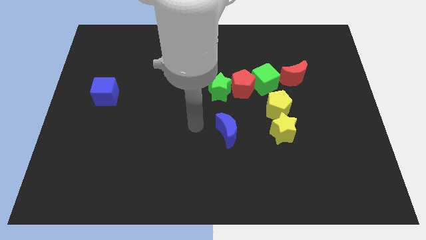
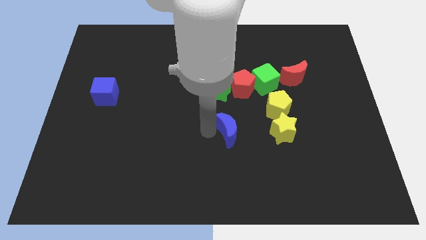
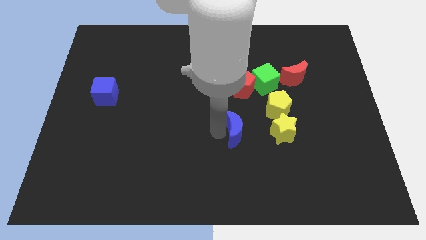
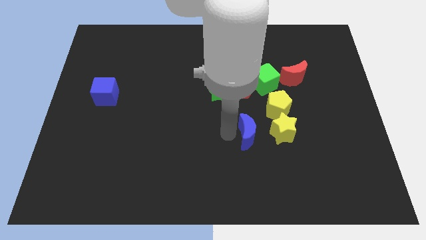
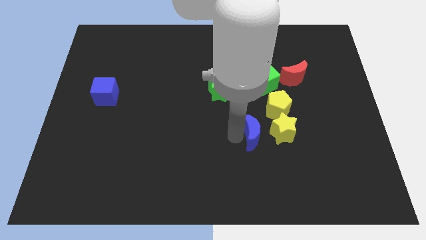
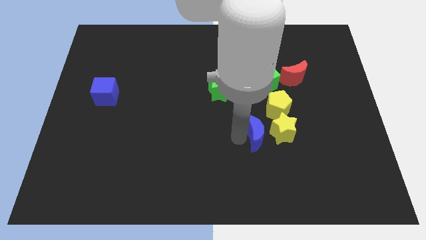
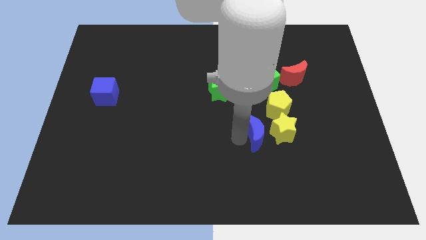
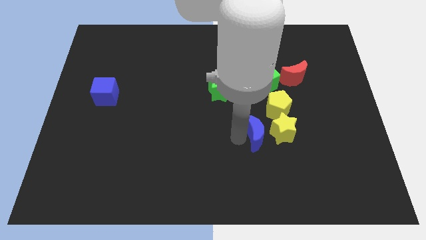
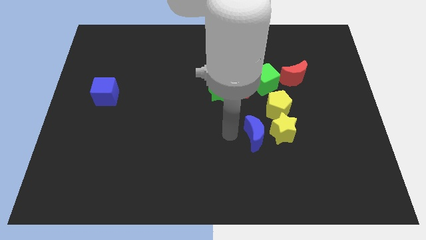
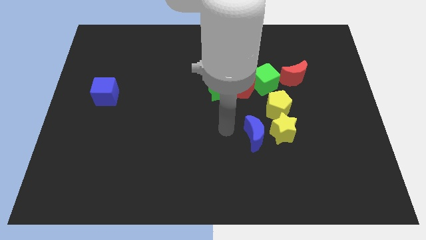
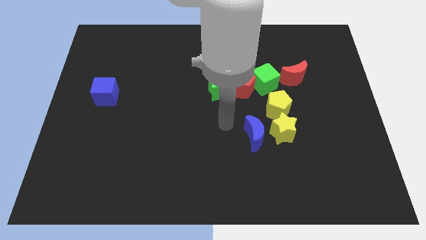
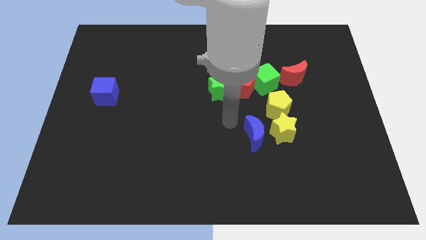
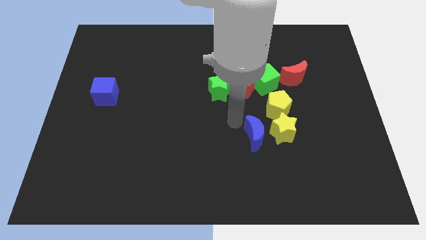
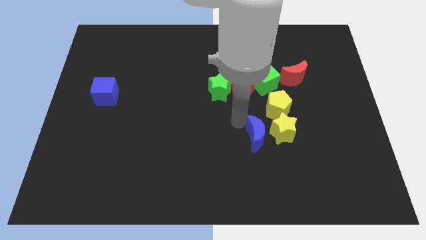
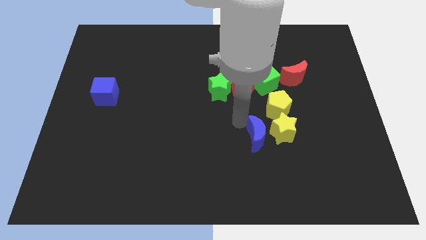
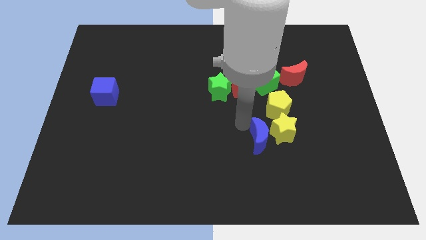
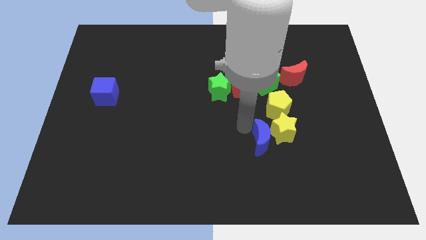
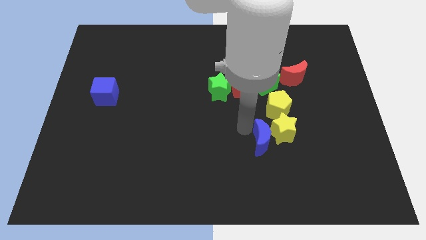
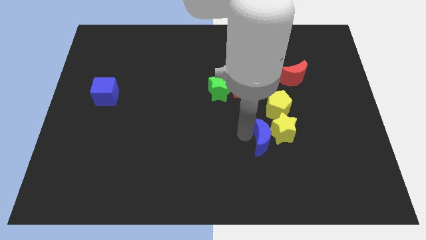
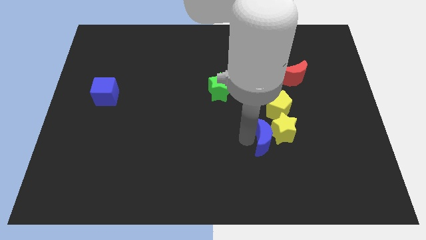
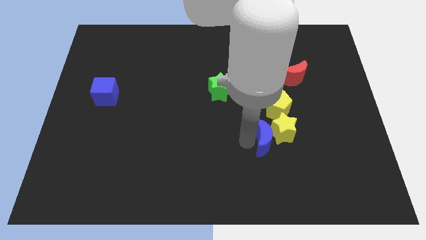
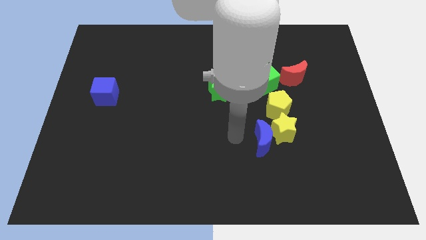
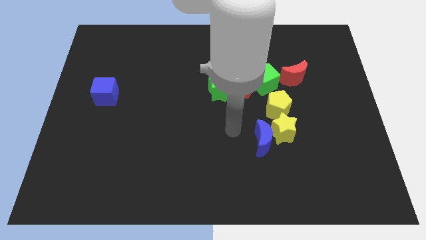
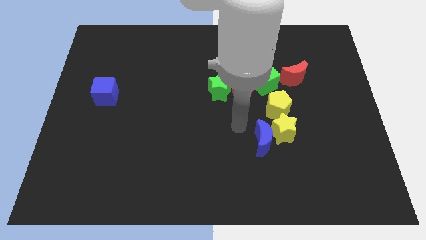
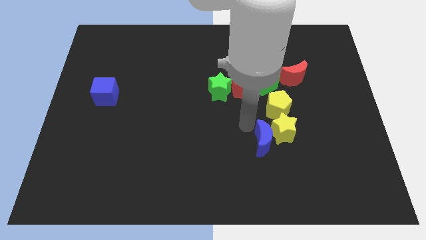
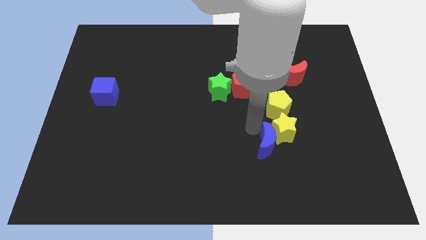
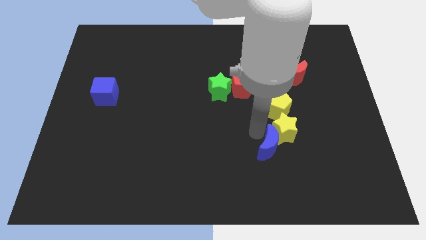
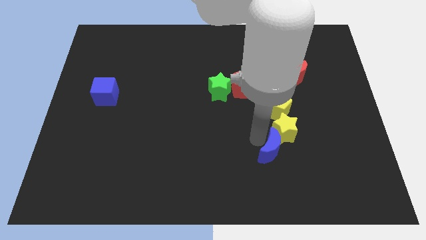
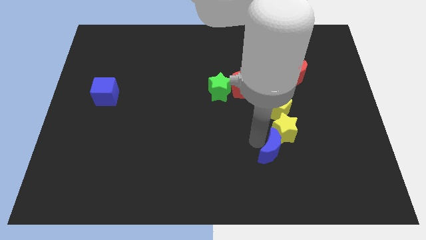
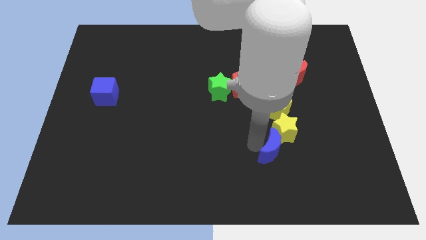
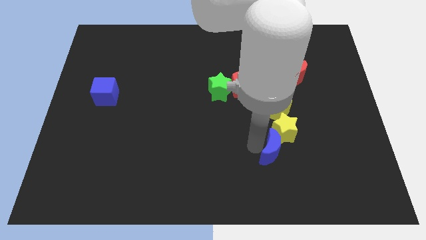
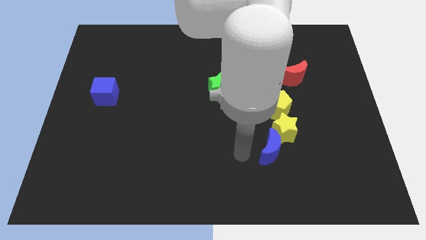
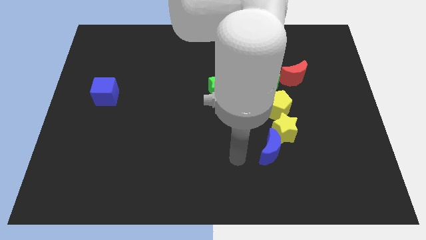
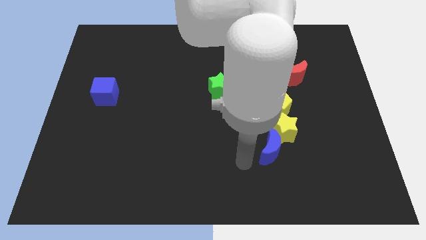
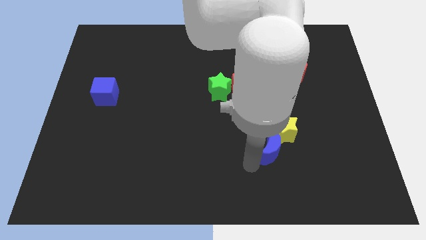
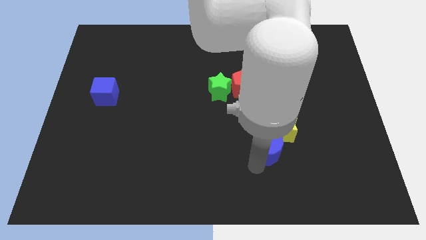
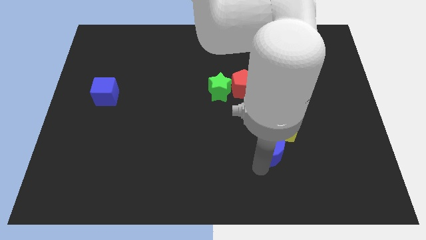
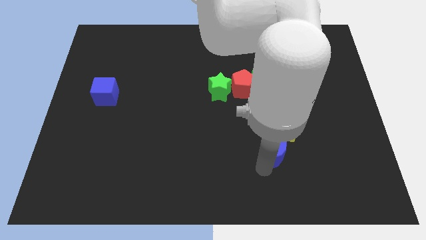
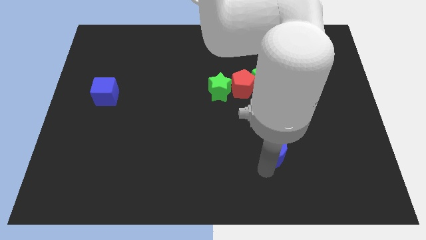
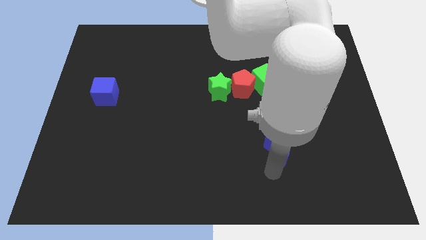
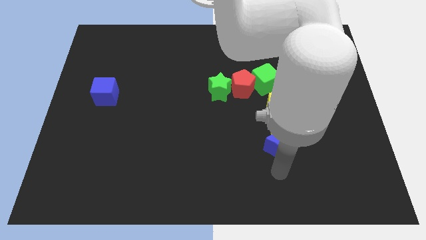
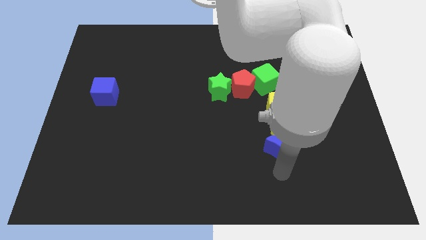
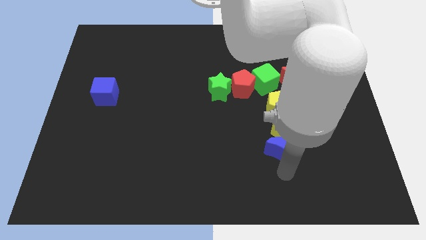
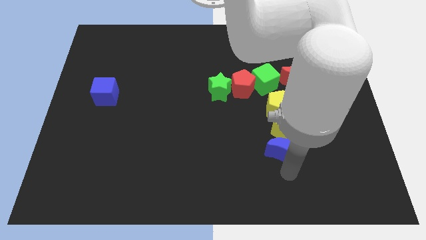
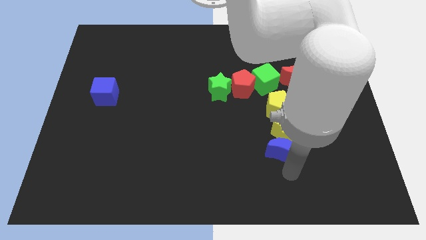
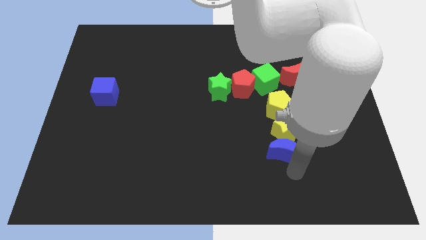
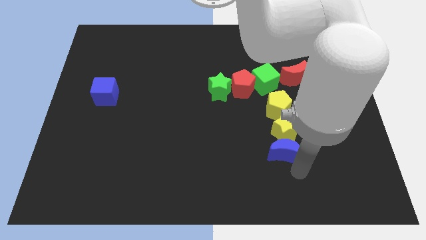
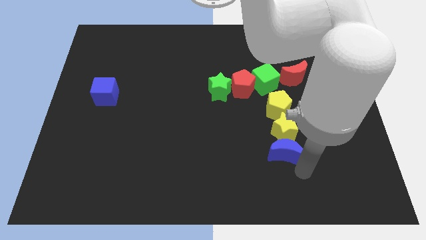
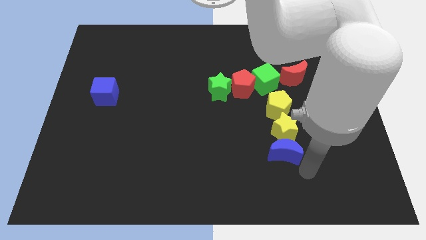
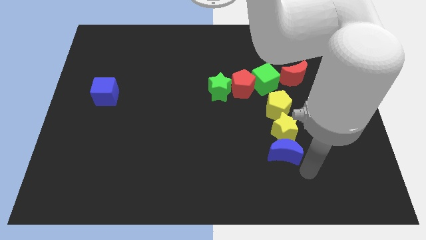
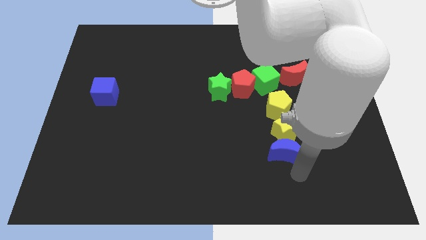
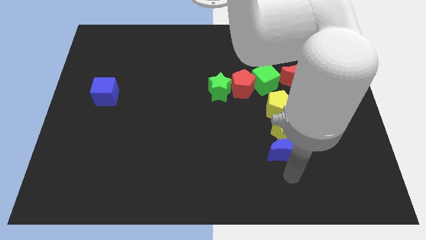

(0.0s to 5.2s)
place the blue crescent below the yellow star

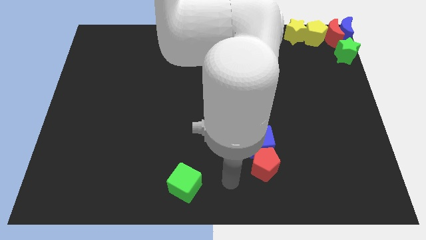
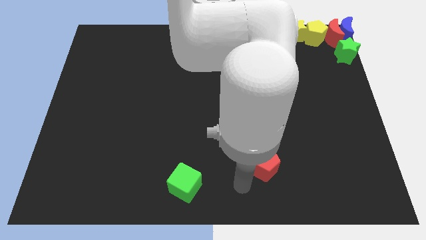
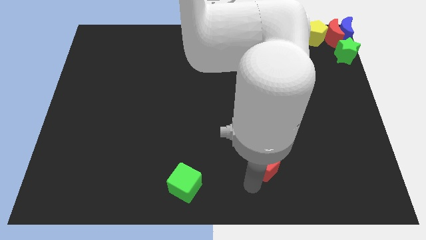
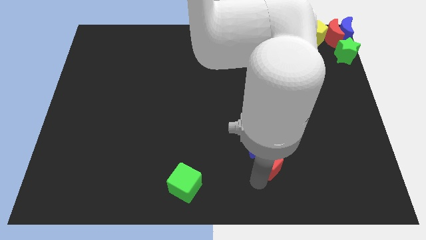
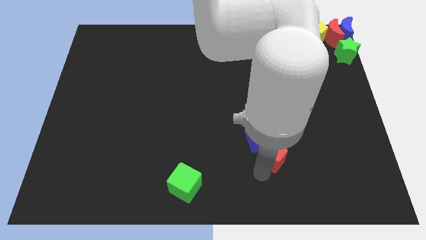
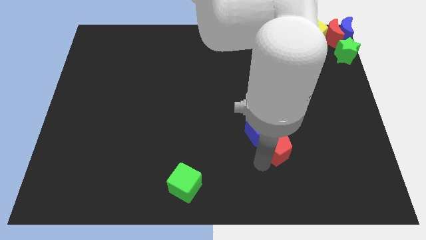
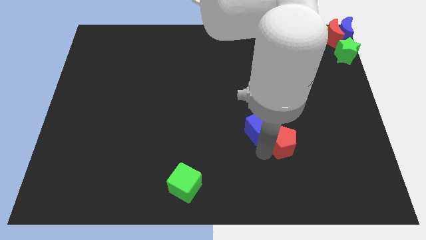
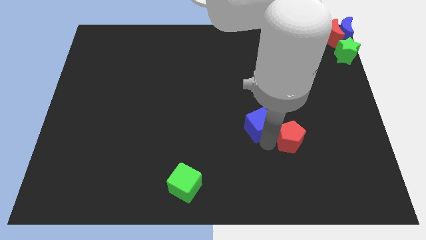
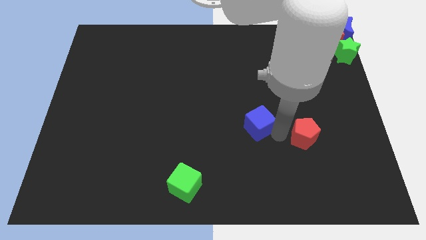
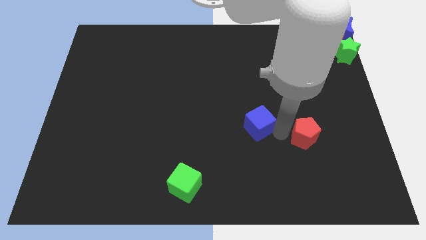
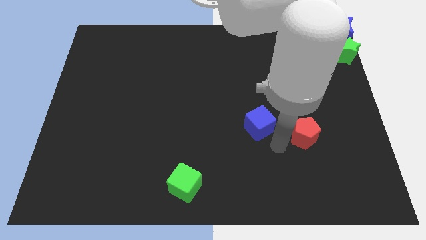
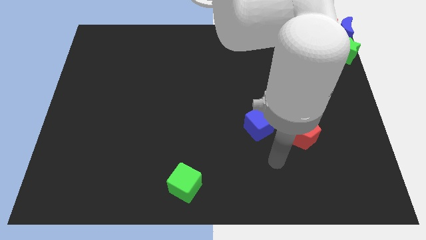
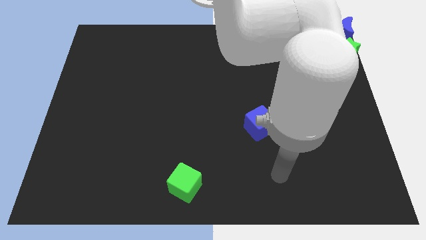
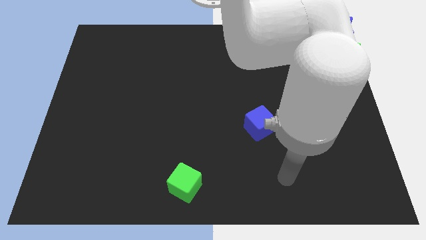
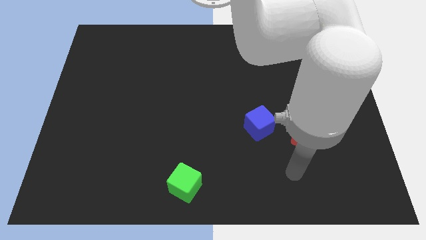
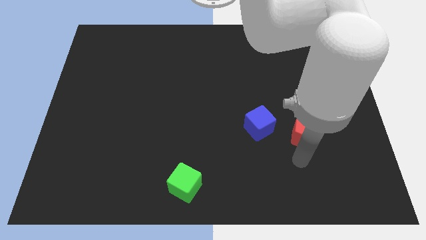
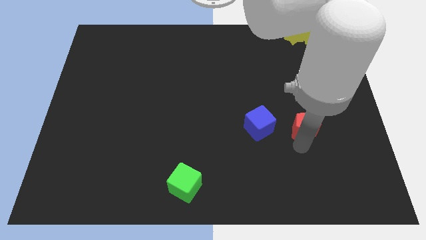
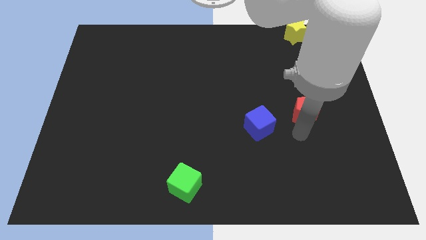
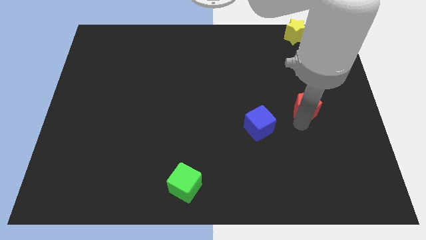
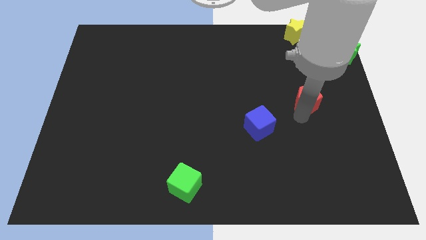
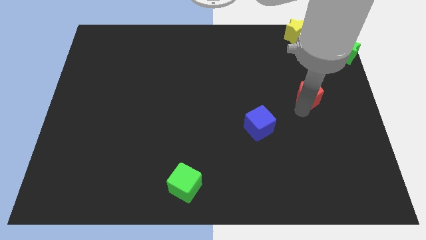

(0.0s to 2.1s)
separate red pentagon from blue cube

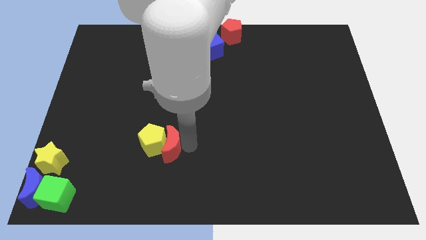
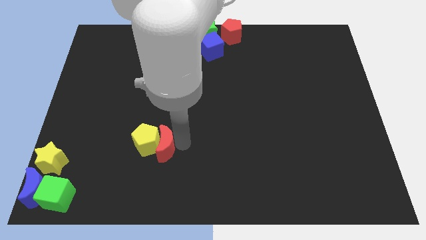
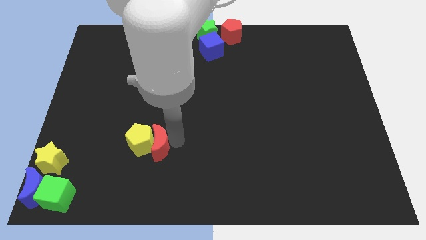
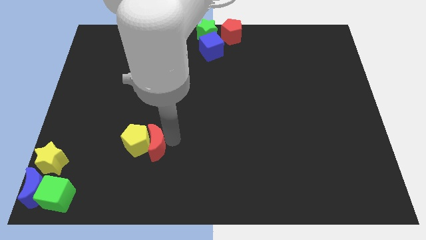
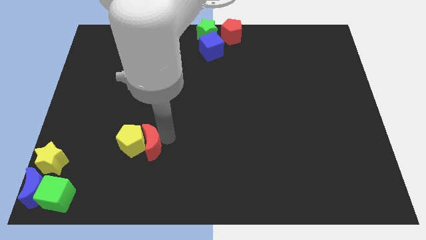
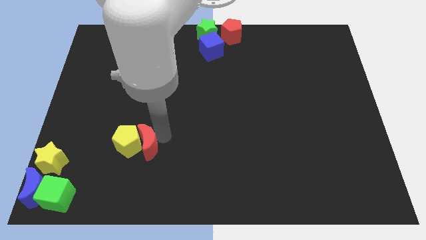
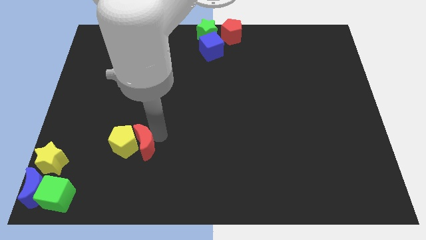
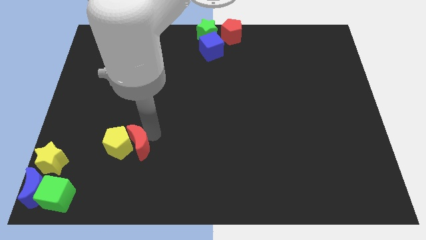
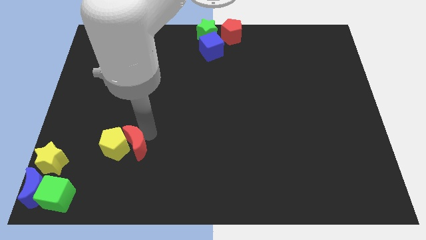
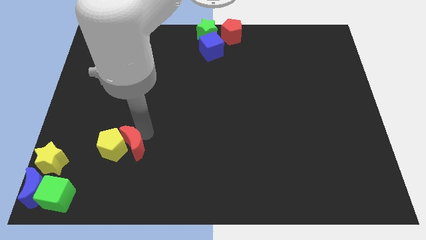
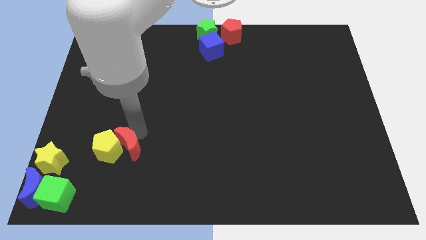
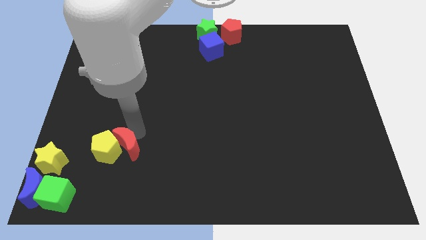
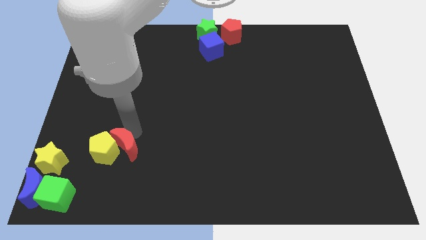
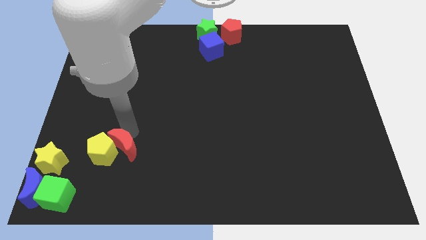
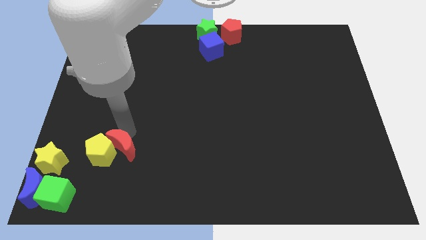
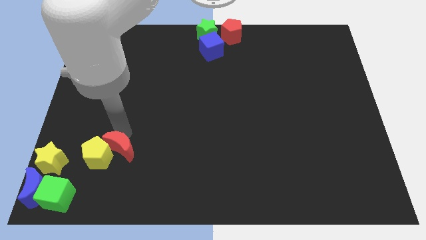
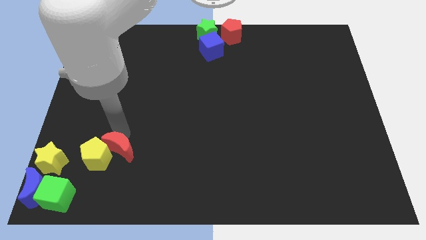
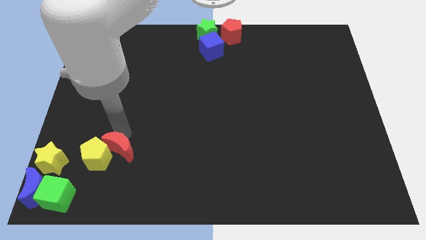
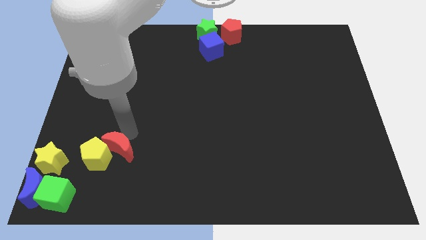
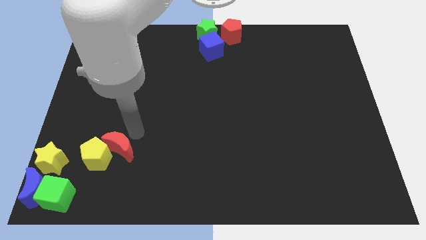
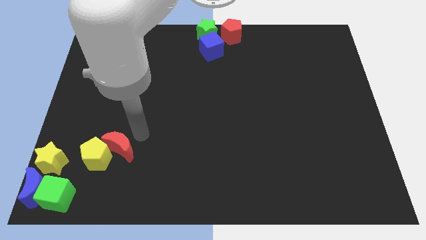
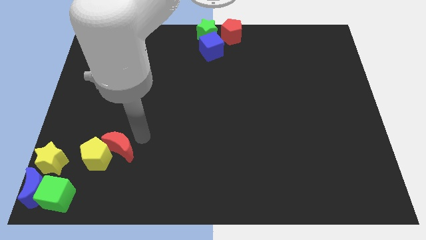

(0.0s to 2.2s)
push the yellow pentagon with the red crescent towards the bottom left of the board
